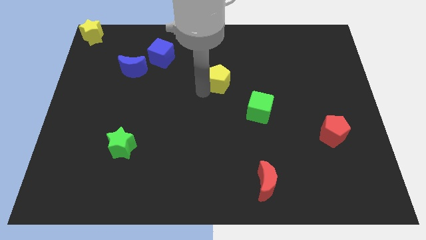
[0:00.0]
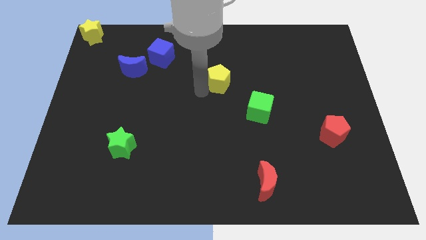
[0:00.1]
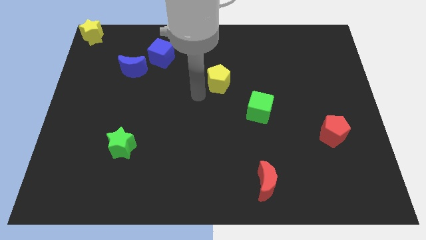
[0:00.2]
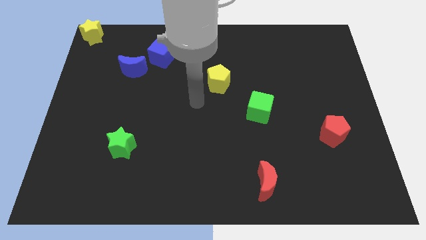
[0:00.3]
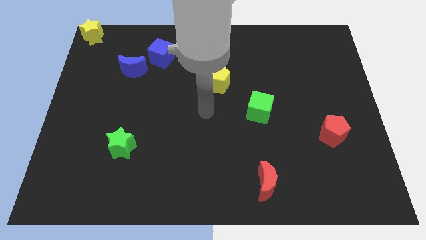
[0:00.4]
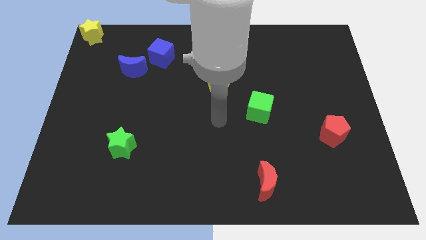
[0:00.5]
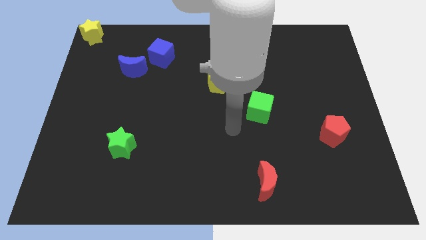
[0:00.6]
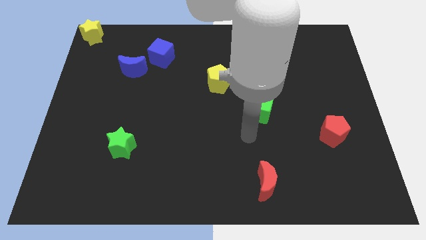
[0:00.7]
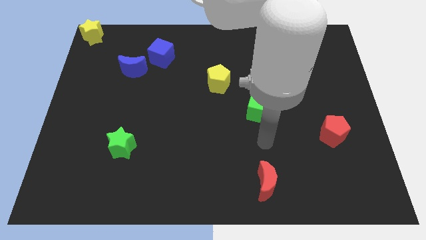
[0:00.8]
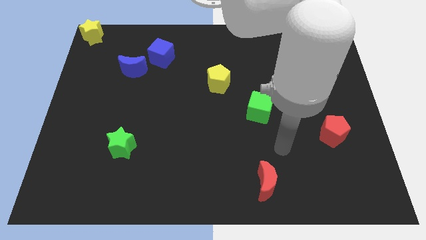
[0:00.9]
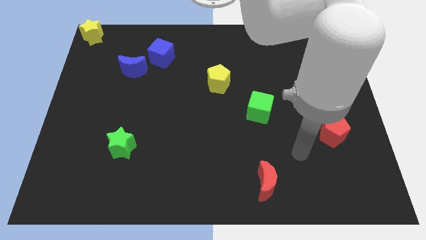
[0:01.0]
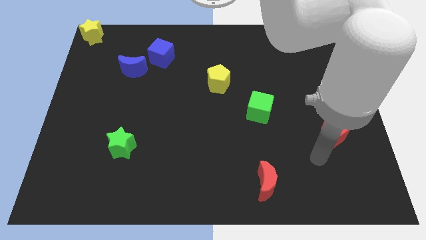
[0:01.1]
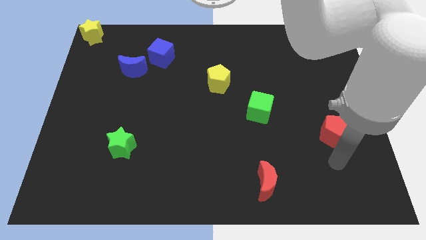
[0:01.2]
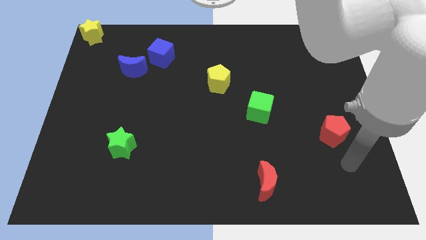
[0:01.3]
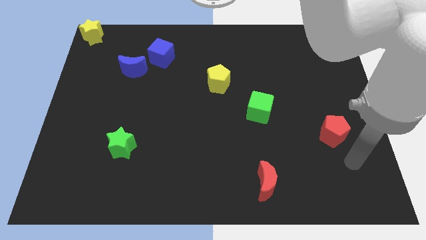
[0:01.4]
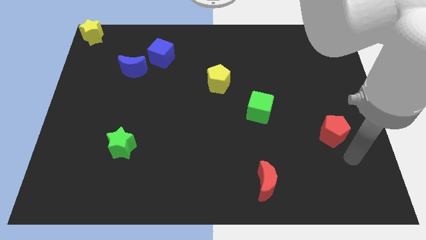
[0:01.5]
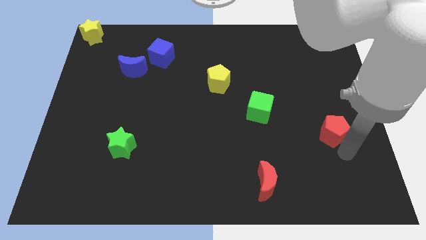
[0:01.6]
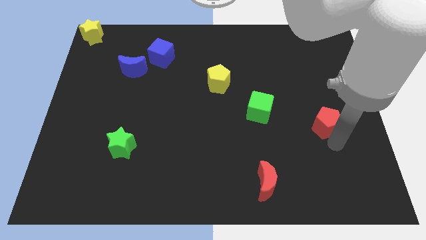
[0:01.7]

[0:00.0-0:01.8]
touch the bottom of the red pentagon

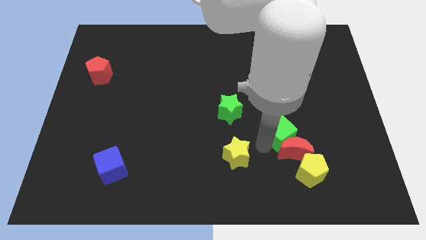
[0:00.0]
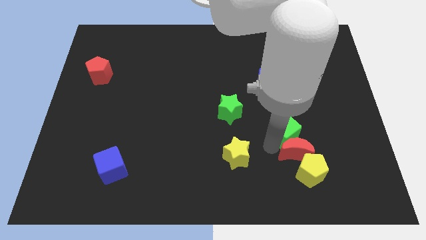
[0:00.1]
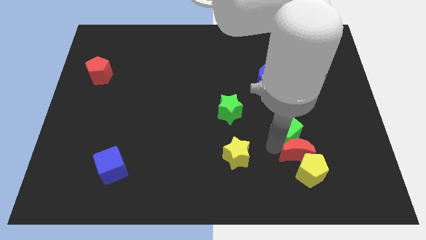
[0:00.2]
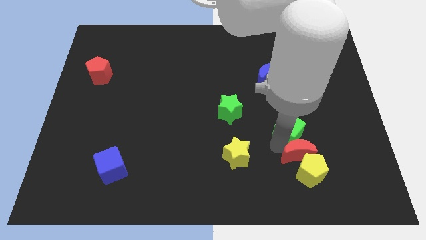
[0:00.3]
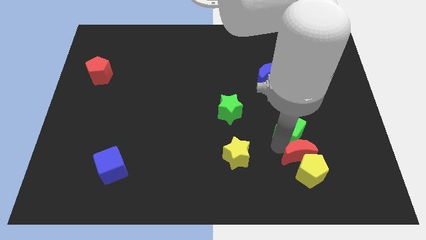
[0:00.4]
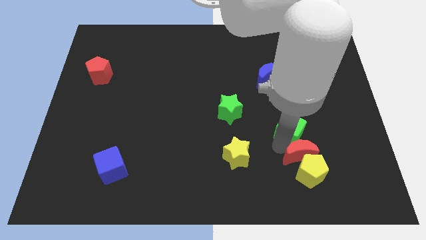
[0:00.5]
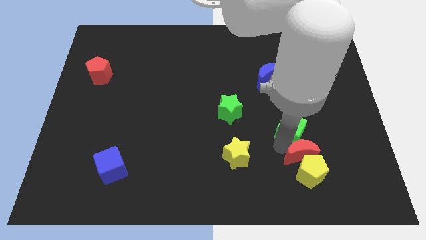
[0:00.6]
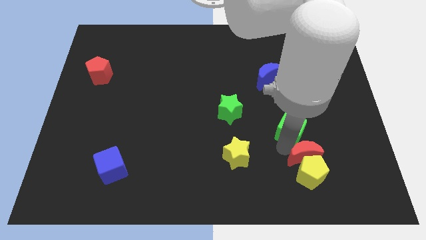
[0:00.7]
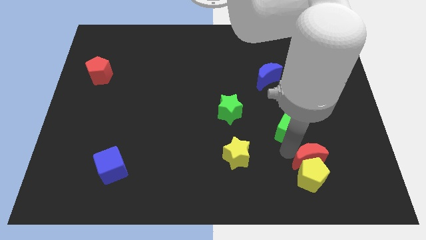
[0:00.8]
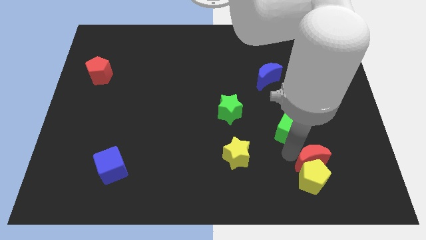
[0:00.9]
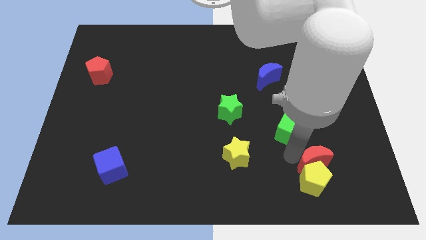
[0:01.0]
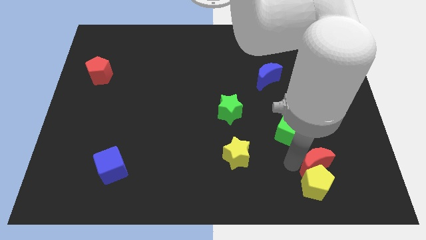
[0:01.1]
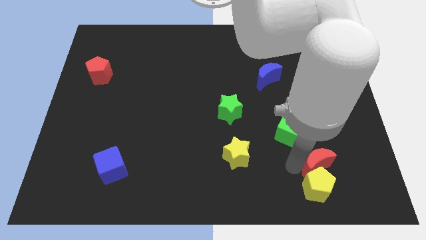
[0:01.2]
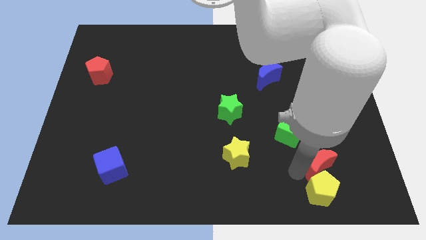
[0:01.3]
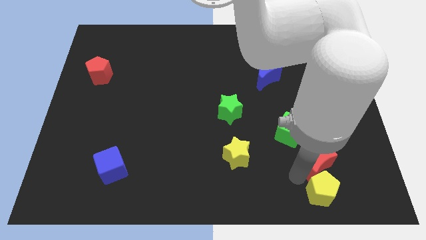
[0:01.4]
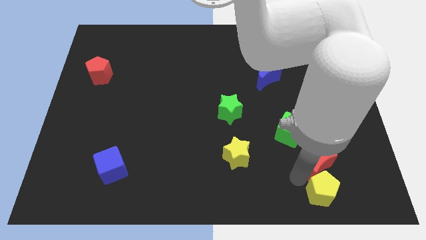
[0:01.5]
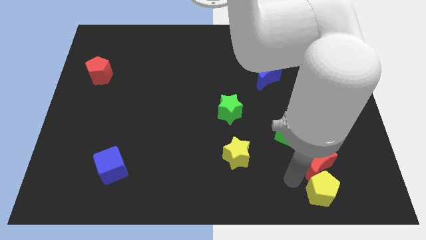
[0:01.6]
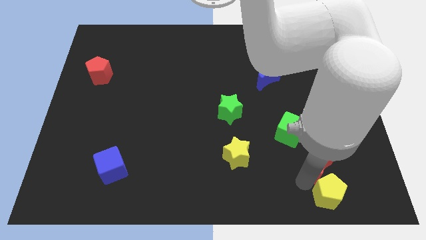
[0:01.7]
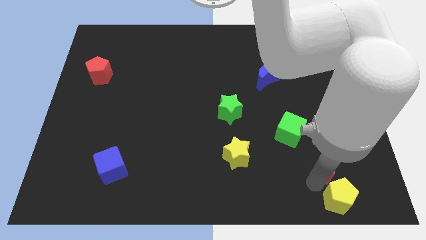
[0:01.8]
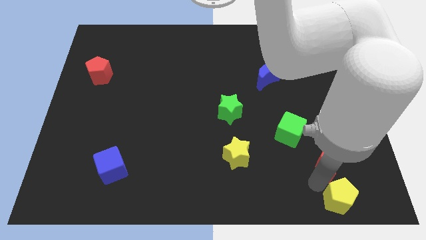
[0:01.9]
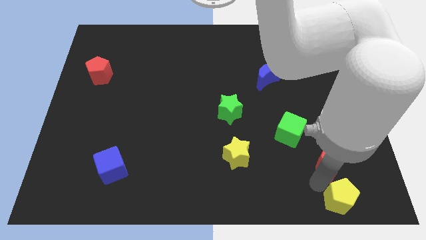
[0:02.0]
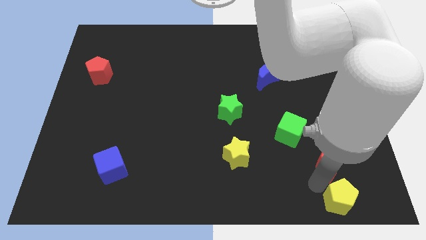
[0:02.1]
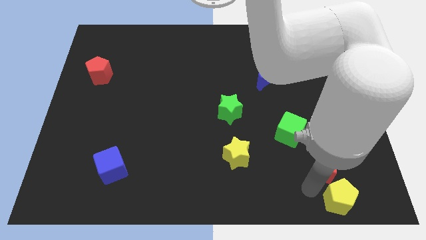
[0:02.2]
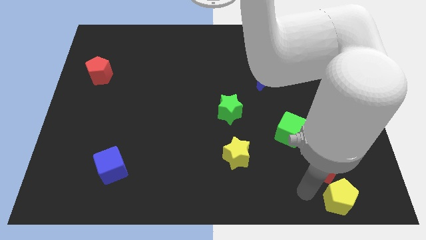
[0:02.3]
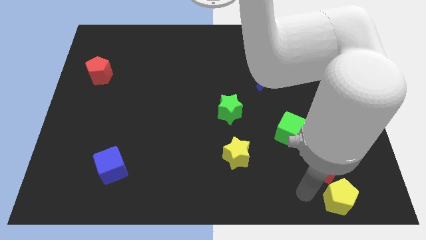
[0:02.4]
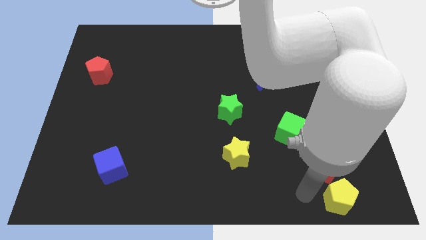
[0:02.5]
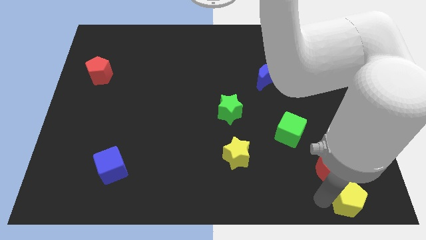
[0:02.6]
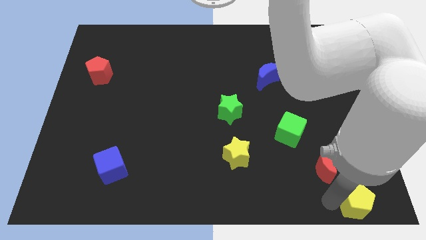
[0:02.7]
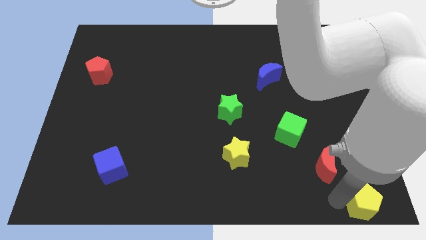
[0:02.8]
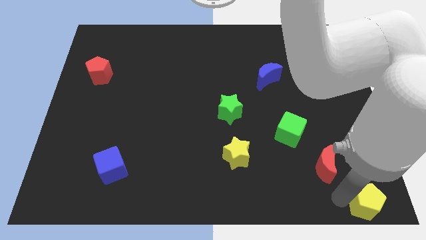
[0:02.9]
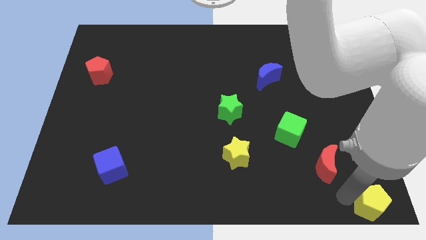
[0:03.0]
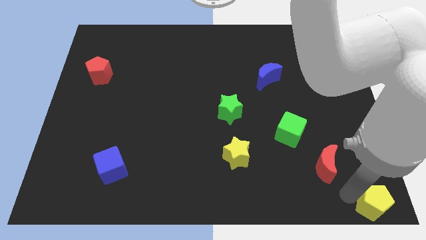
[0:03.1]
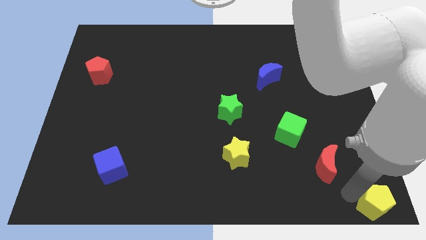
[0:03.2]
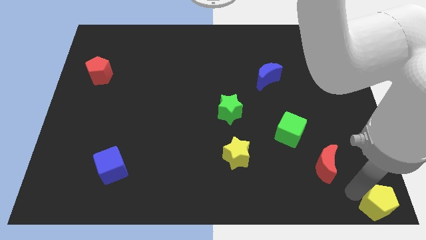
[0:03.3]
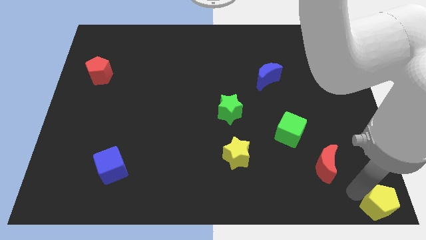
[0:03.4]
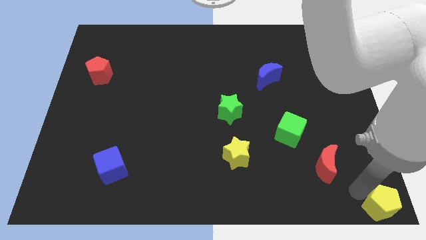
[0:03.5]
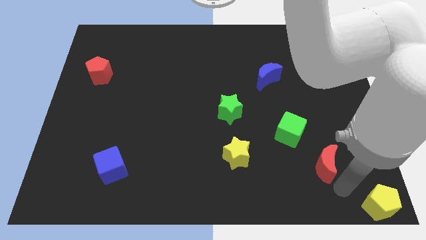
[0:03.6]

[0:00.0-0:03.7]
push the yellow pentagon to the bottom right corner

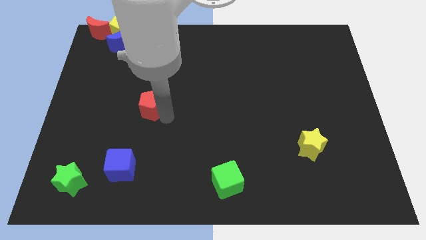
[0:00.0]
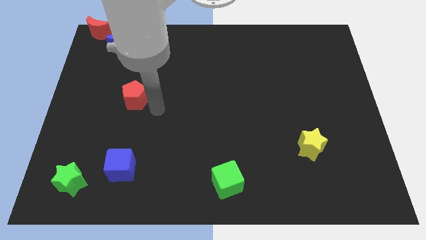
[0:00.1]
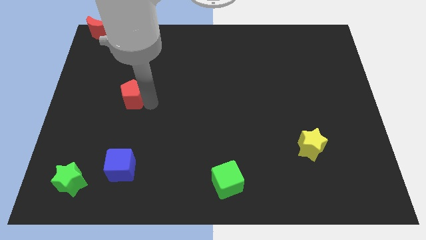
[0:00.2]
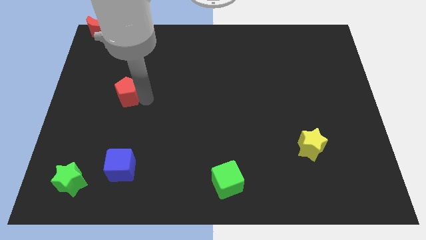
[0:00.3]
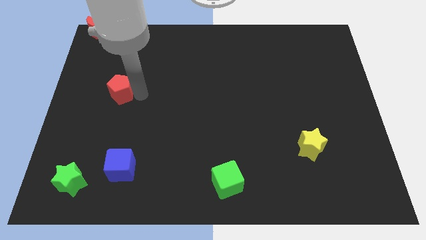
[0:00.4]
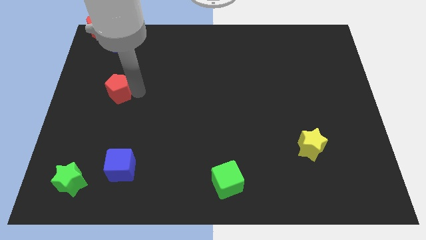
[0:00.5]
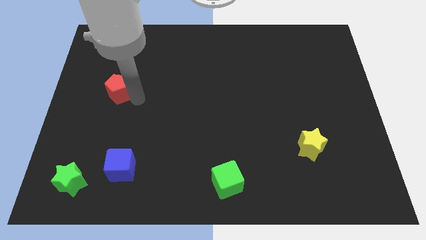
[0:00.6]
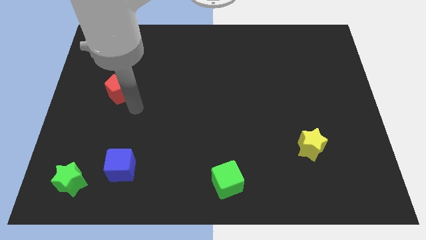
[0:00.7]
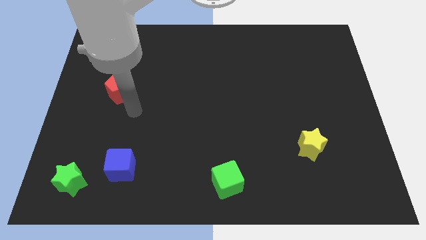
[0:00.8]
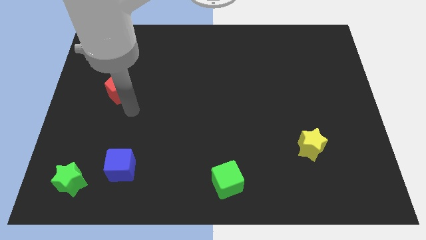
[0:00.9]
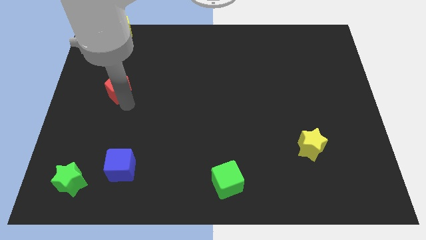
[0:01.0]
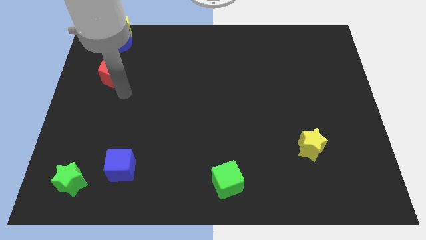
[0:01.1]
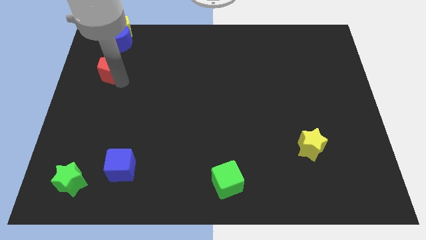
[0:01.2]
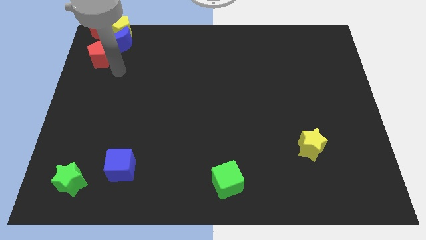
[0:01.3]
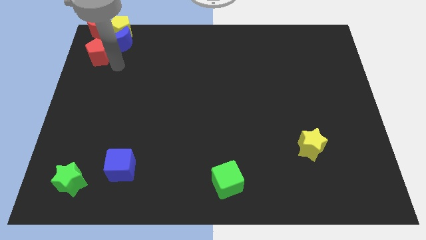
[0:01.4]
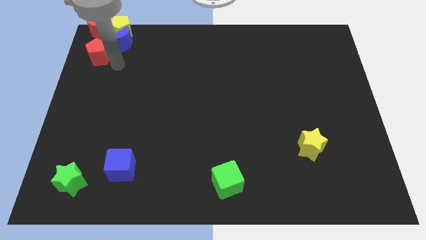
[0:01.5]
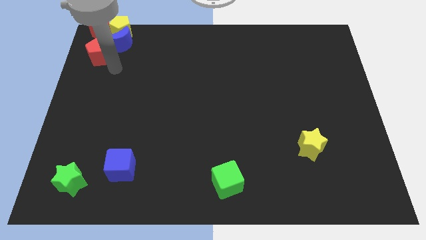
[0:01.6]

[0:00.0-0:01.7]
push the red pentagon slightly upwards

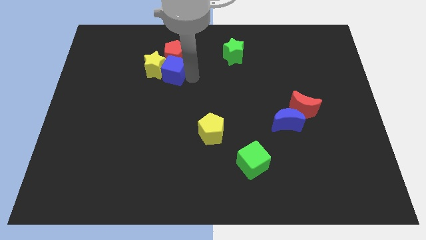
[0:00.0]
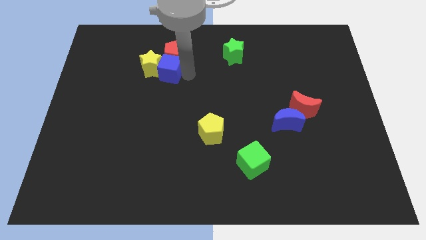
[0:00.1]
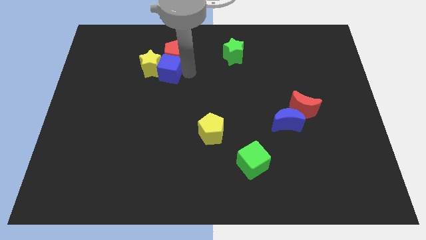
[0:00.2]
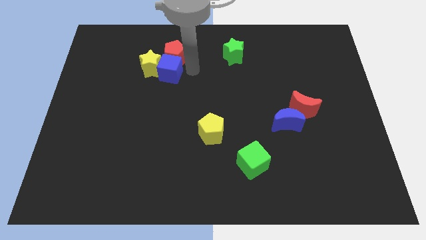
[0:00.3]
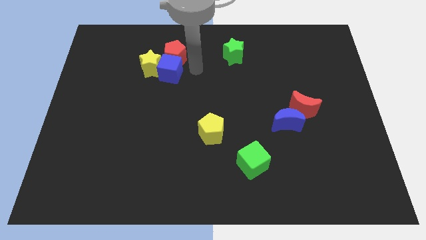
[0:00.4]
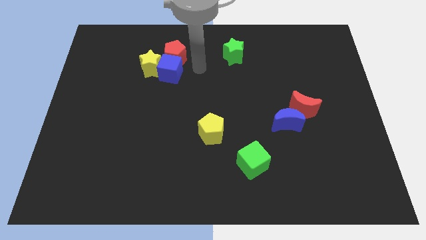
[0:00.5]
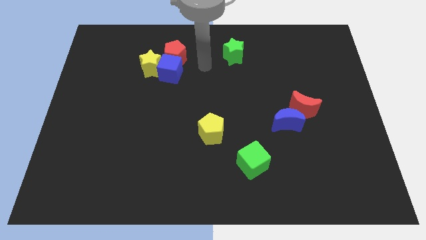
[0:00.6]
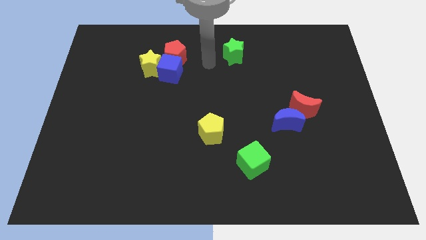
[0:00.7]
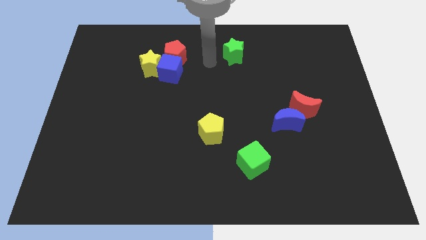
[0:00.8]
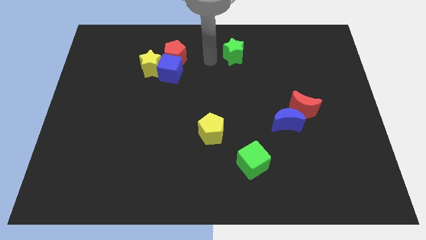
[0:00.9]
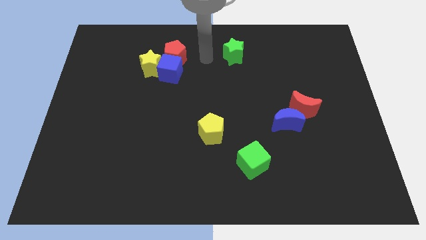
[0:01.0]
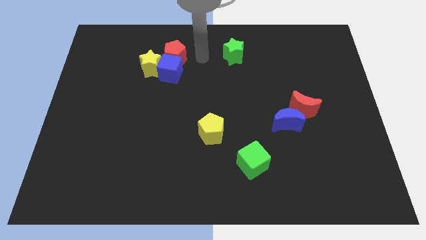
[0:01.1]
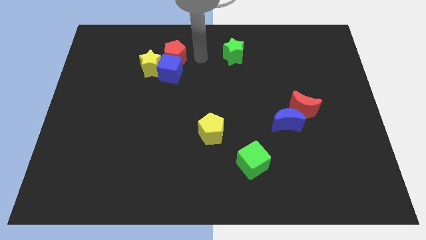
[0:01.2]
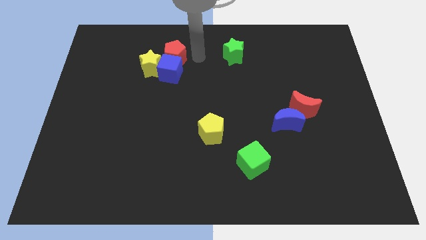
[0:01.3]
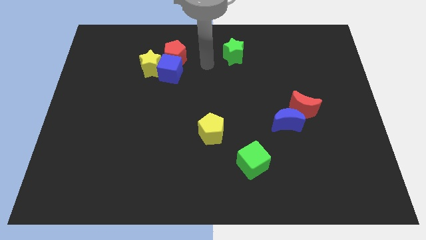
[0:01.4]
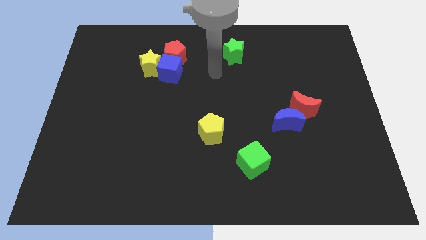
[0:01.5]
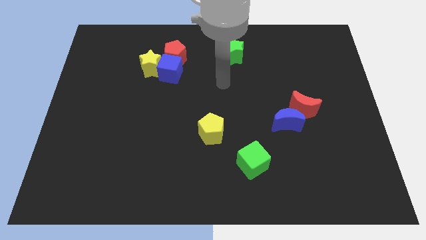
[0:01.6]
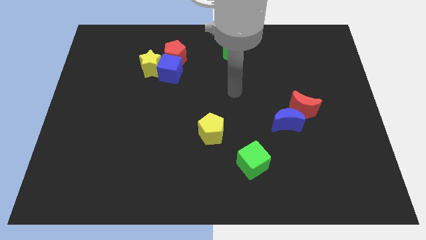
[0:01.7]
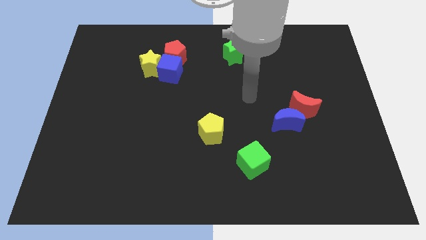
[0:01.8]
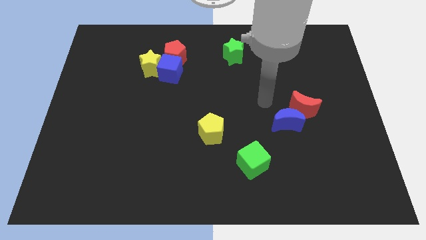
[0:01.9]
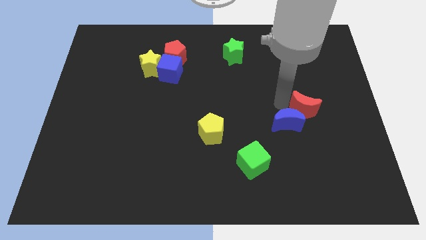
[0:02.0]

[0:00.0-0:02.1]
place the arm between red and blue crescent
